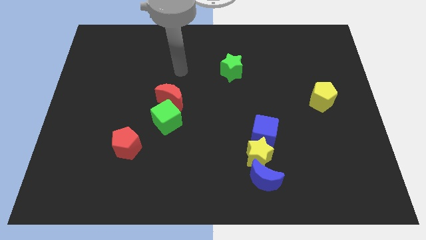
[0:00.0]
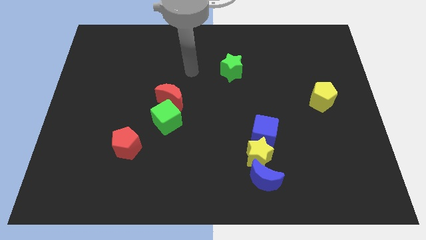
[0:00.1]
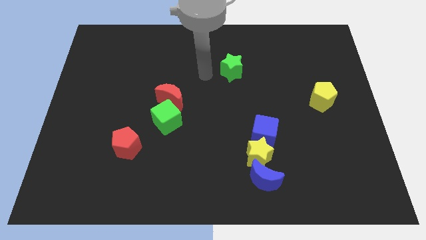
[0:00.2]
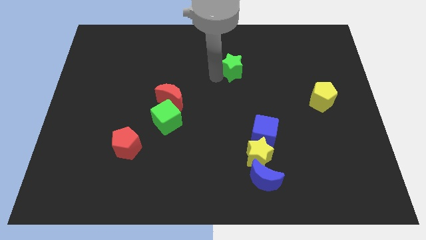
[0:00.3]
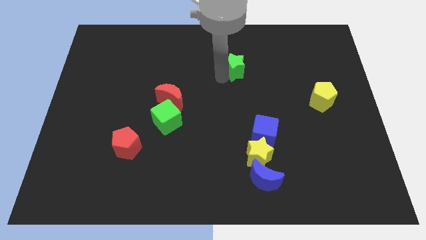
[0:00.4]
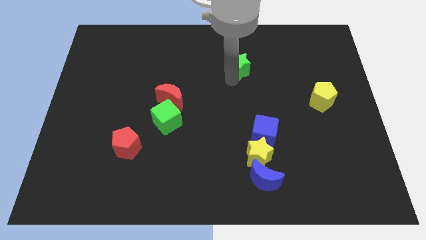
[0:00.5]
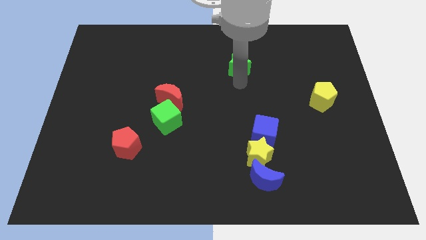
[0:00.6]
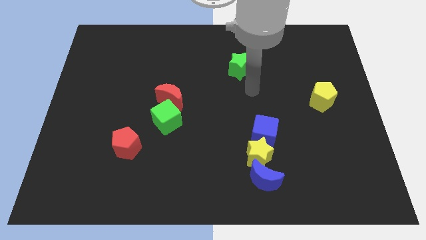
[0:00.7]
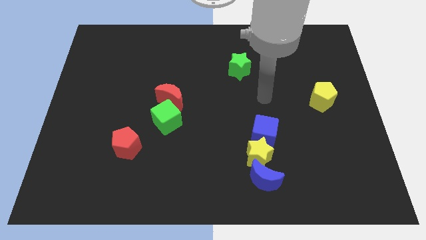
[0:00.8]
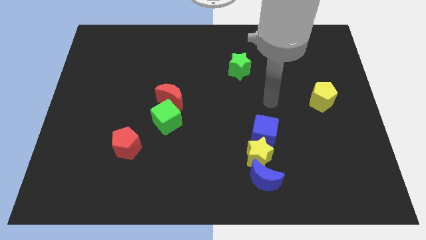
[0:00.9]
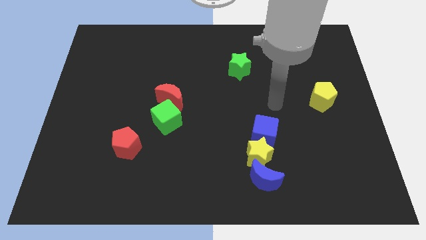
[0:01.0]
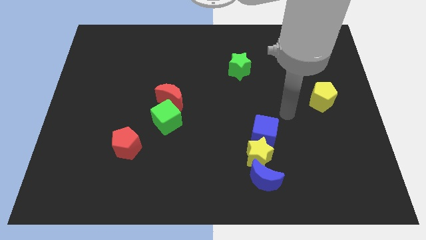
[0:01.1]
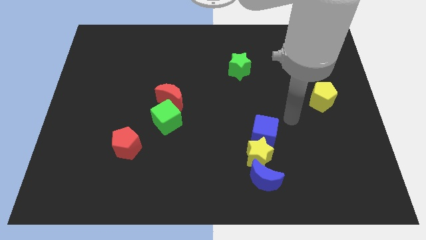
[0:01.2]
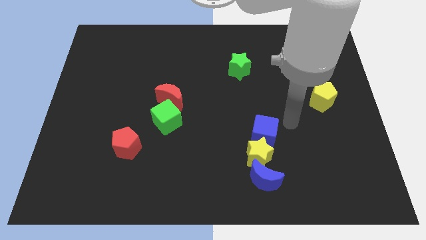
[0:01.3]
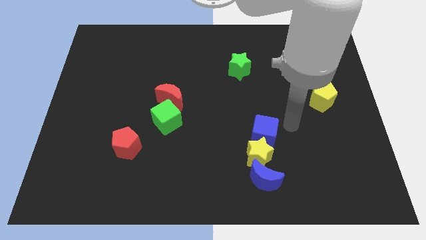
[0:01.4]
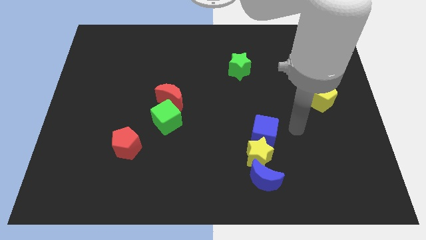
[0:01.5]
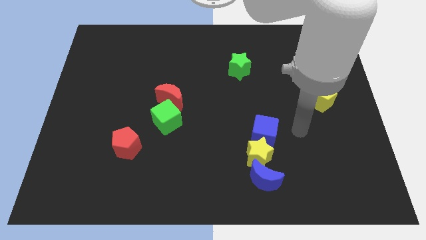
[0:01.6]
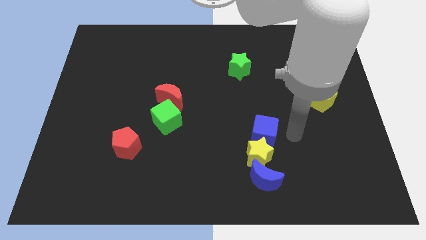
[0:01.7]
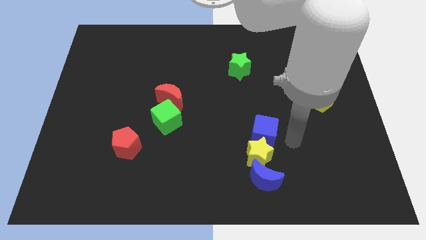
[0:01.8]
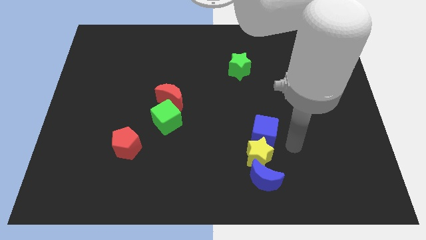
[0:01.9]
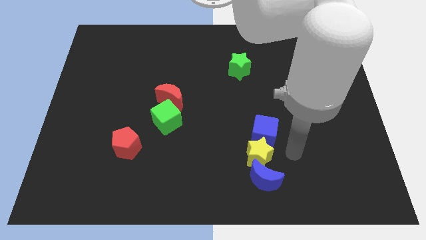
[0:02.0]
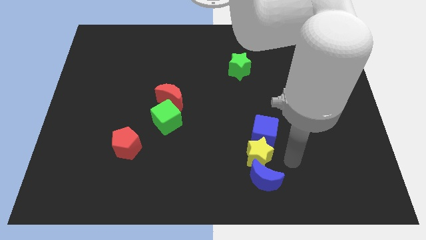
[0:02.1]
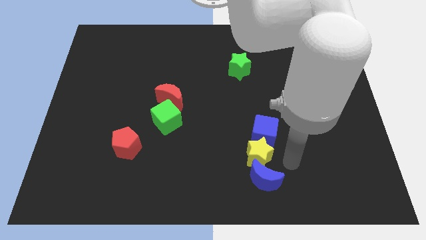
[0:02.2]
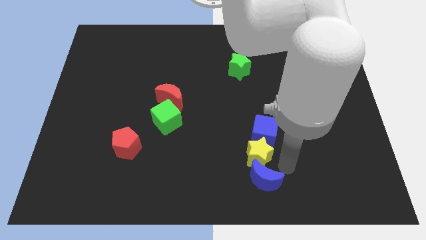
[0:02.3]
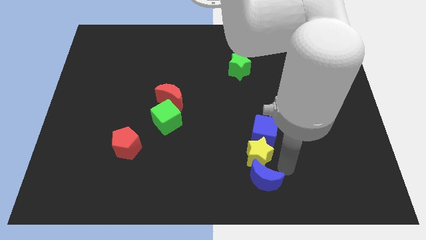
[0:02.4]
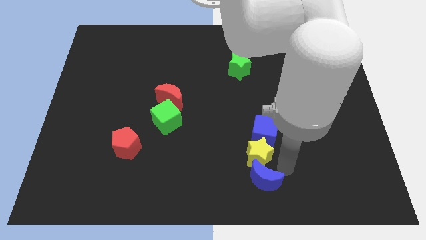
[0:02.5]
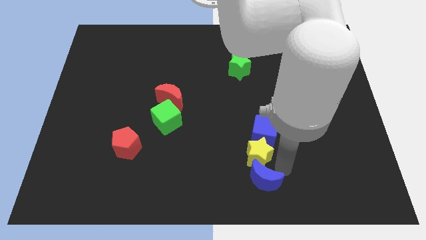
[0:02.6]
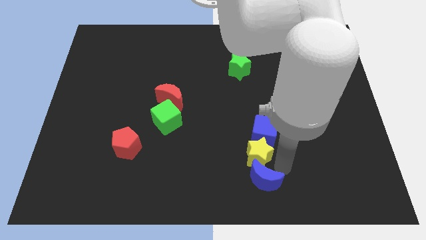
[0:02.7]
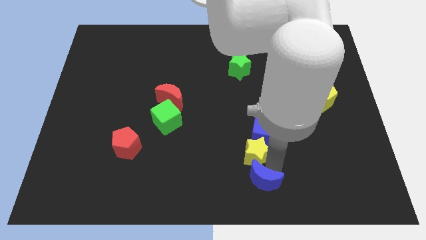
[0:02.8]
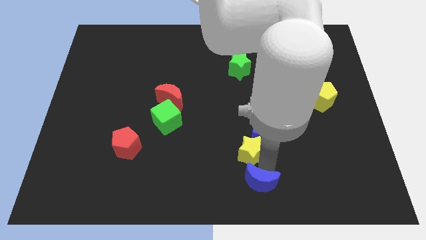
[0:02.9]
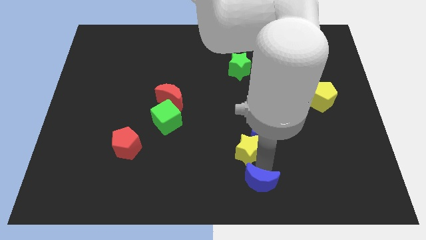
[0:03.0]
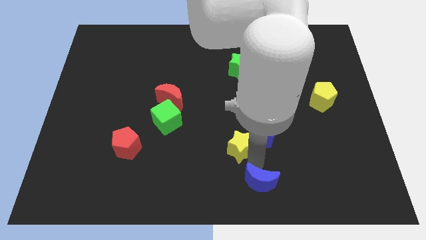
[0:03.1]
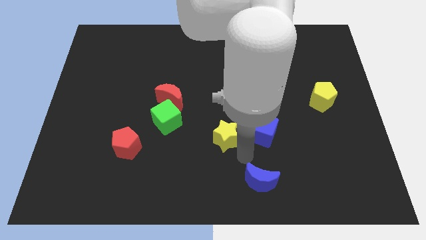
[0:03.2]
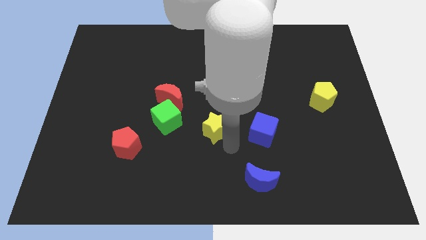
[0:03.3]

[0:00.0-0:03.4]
move the yellow star away from the blue objects

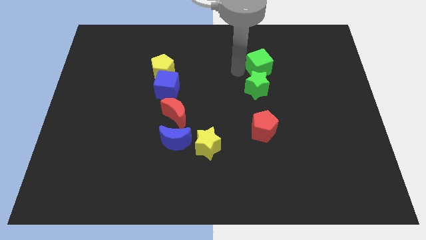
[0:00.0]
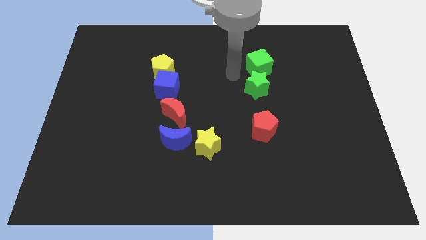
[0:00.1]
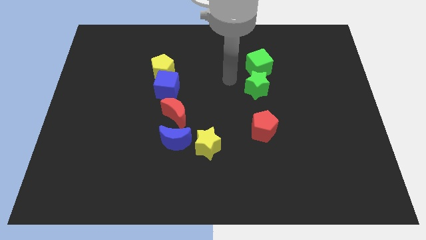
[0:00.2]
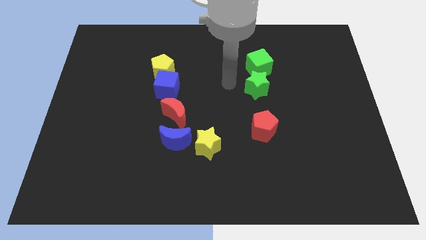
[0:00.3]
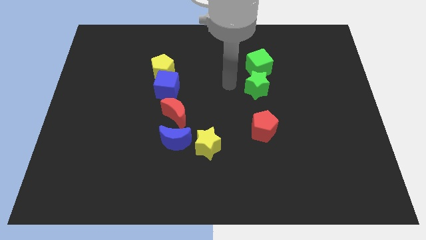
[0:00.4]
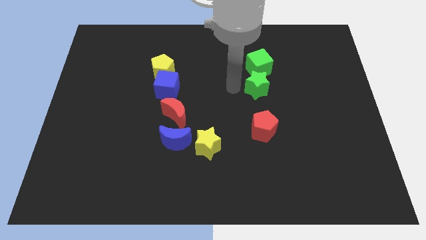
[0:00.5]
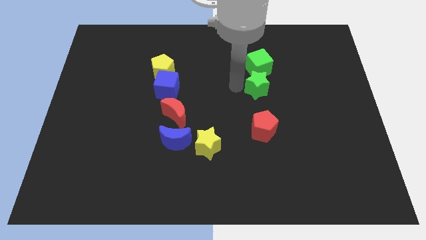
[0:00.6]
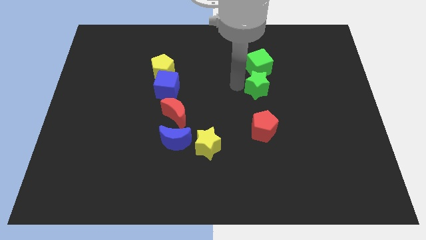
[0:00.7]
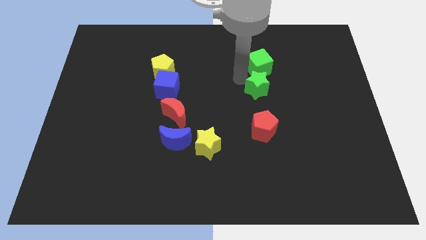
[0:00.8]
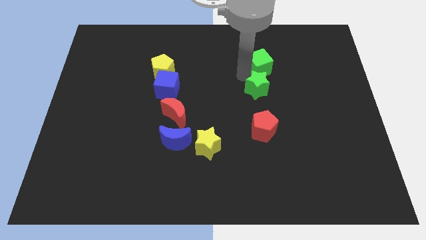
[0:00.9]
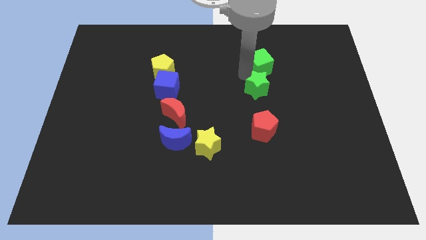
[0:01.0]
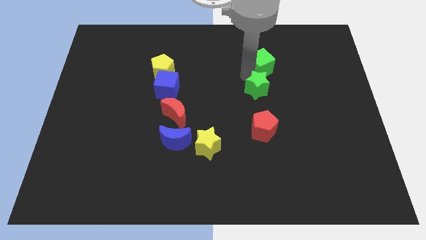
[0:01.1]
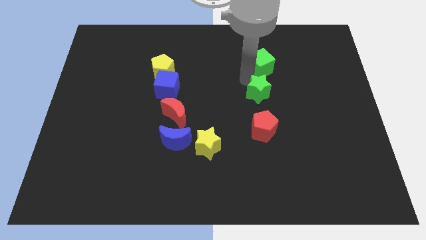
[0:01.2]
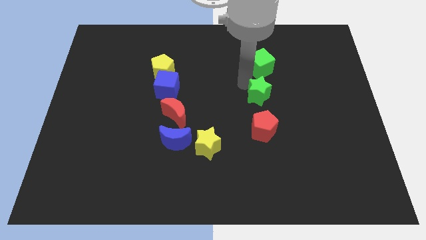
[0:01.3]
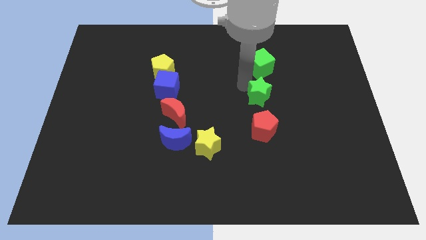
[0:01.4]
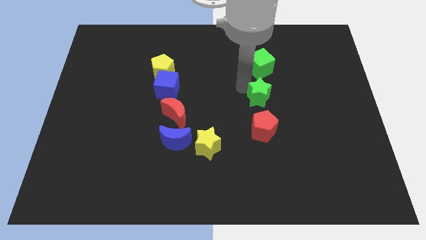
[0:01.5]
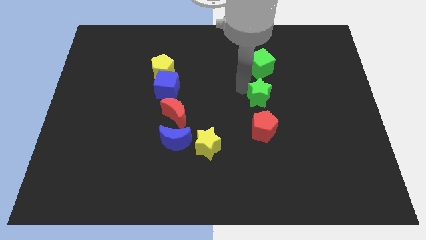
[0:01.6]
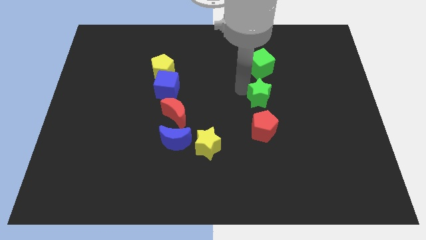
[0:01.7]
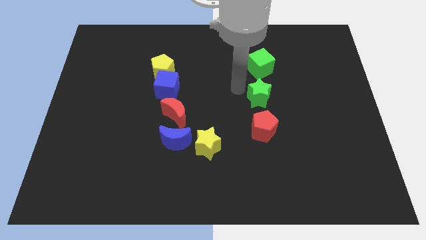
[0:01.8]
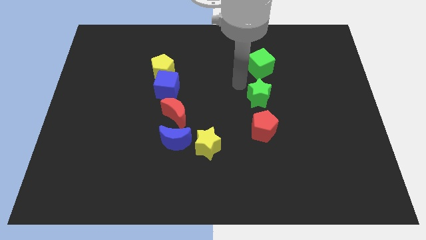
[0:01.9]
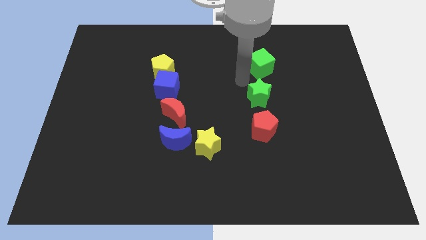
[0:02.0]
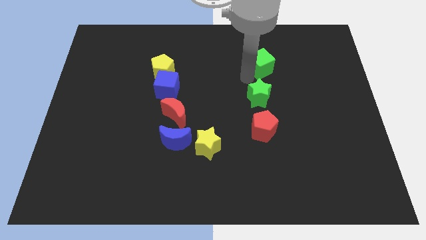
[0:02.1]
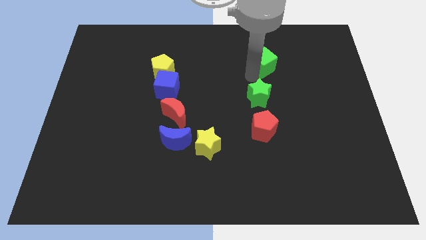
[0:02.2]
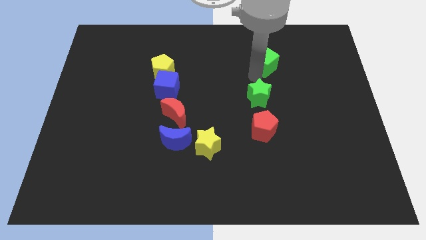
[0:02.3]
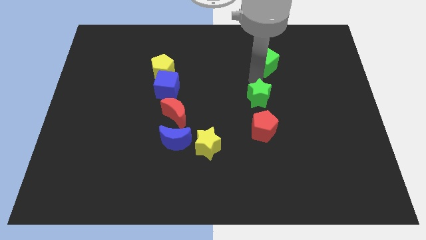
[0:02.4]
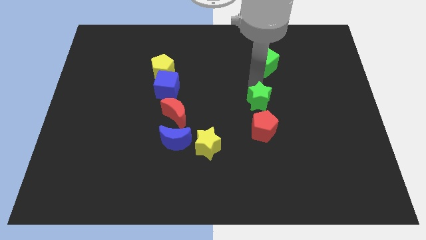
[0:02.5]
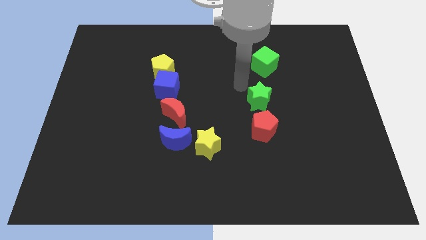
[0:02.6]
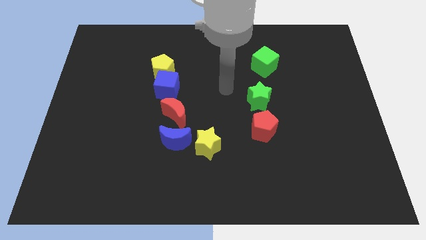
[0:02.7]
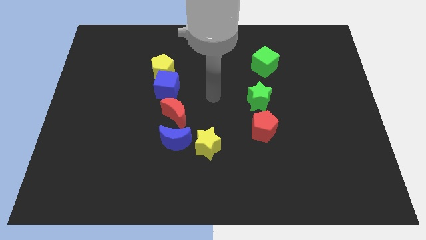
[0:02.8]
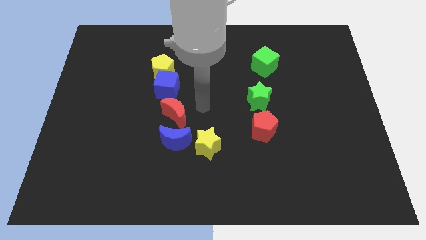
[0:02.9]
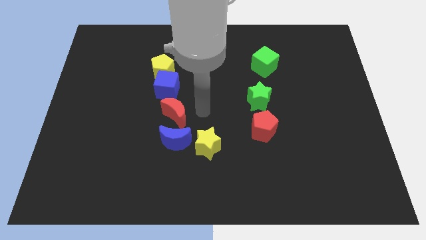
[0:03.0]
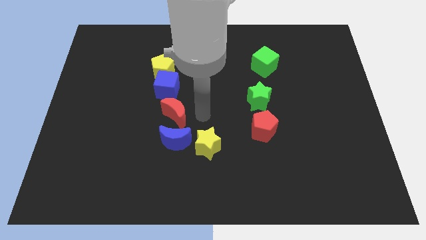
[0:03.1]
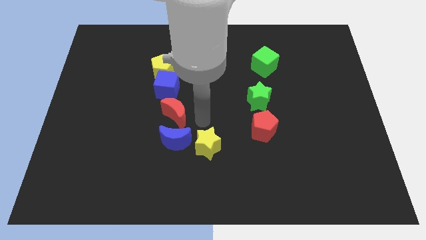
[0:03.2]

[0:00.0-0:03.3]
place the green blocks and red pentagon in a line vertically

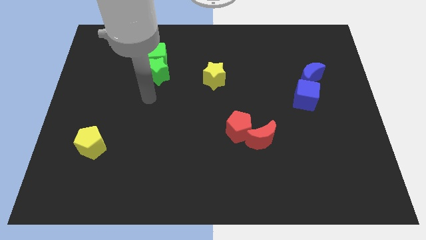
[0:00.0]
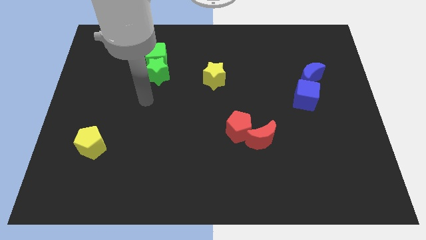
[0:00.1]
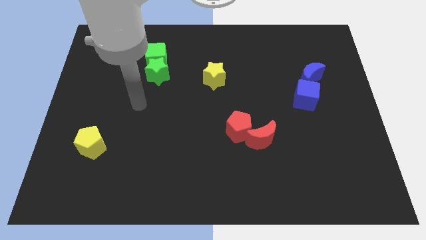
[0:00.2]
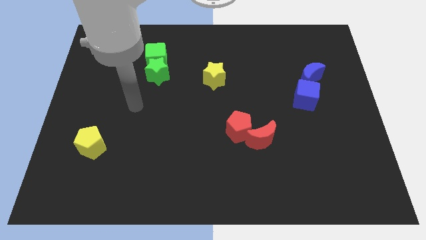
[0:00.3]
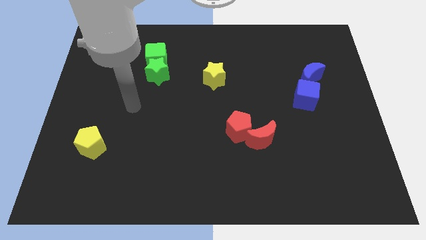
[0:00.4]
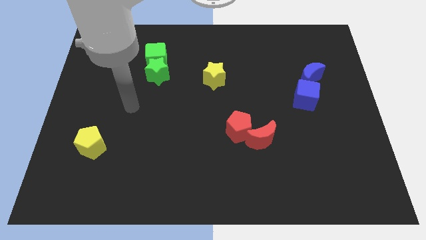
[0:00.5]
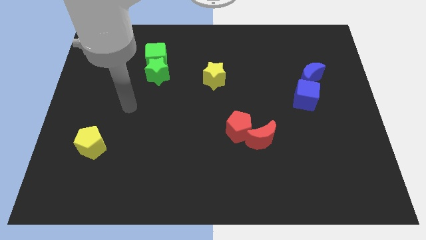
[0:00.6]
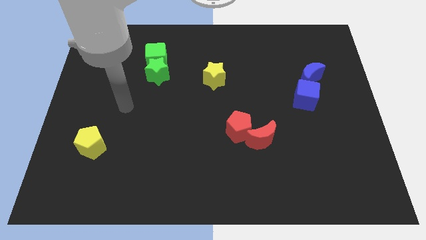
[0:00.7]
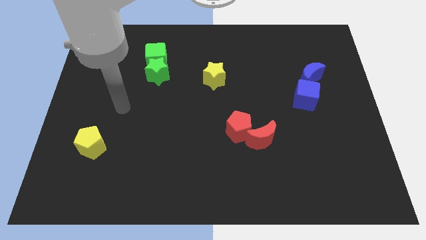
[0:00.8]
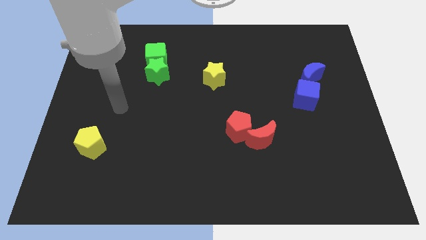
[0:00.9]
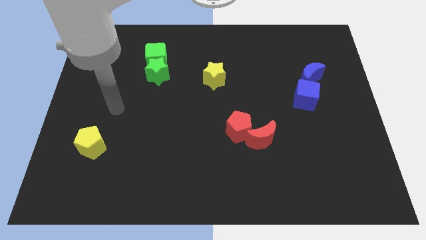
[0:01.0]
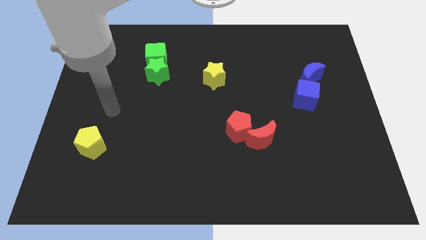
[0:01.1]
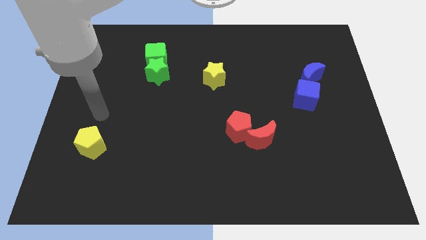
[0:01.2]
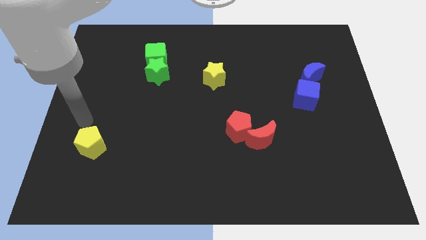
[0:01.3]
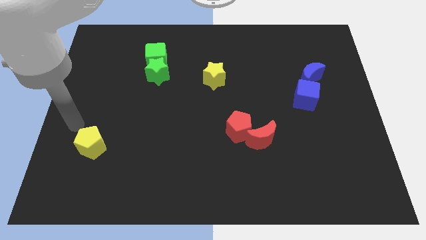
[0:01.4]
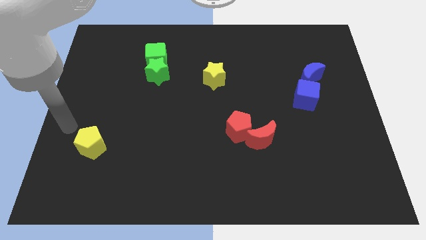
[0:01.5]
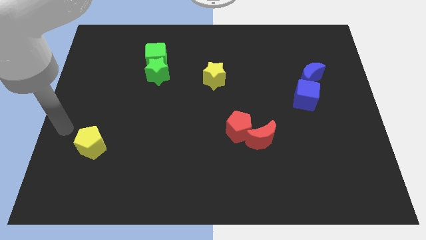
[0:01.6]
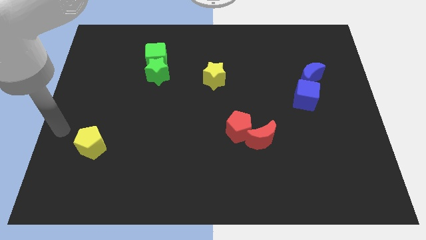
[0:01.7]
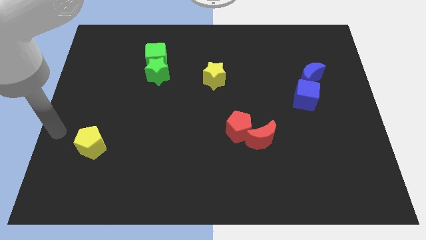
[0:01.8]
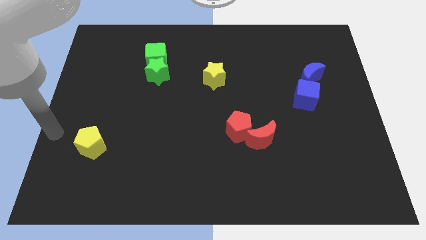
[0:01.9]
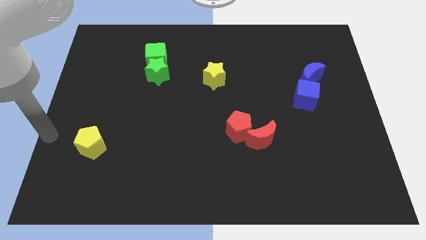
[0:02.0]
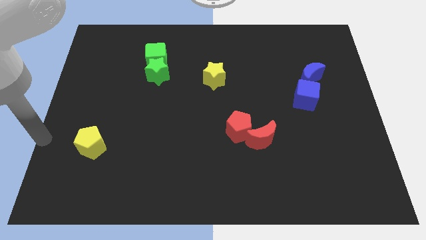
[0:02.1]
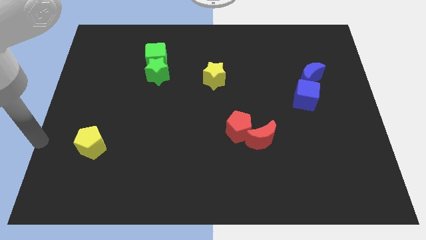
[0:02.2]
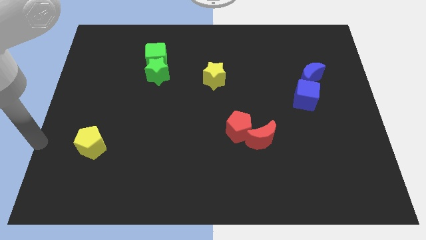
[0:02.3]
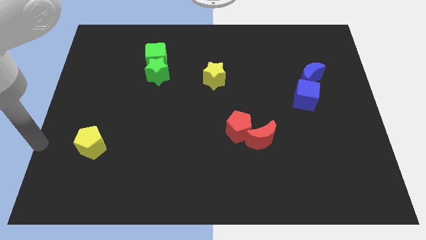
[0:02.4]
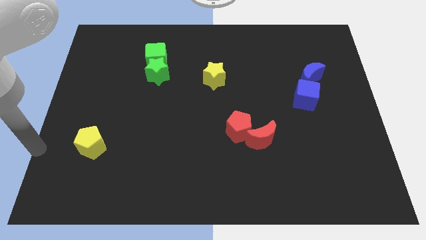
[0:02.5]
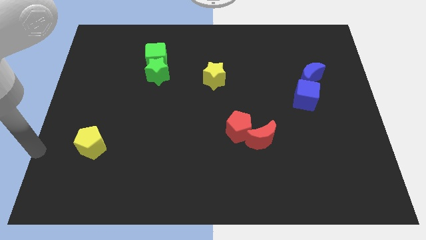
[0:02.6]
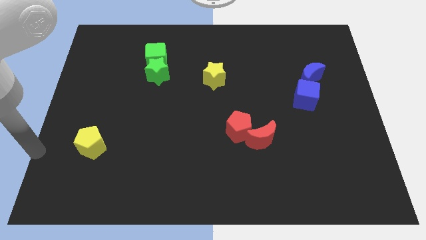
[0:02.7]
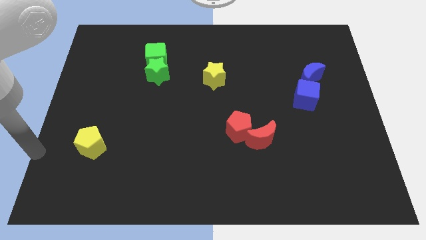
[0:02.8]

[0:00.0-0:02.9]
point your hand at the left side of the yellow pentagon
